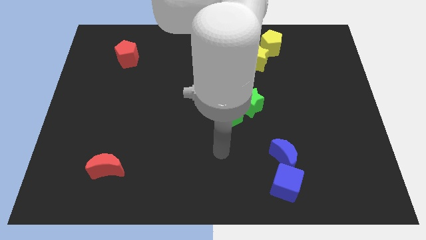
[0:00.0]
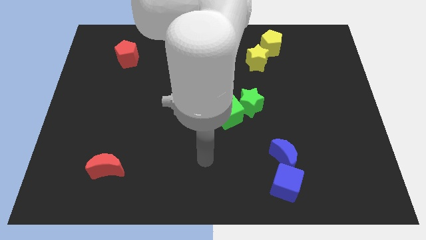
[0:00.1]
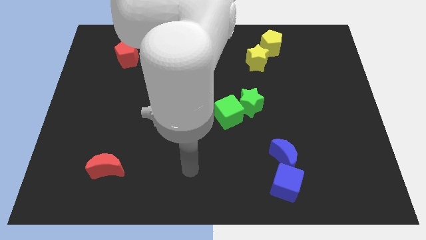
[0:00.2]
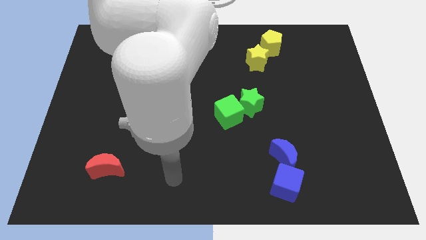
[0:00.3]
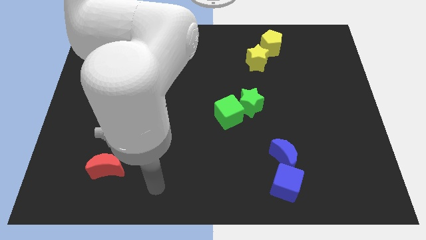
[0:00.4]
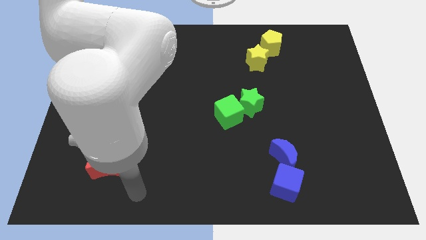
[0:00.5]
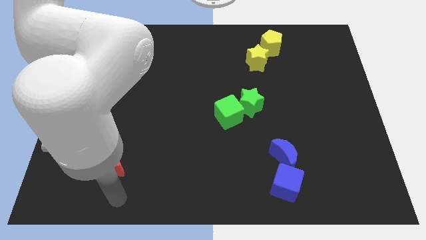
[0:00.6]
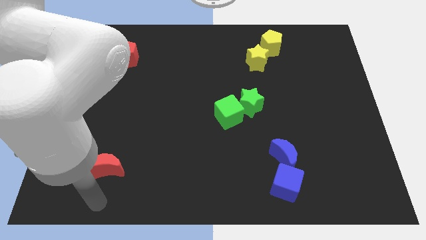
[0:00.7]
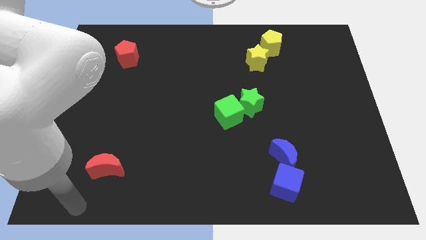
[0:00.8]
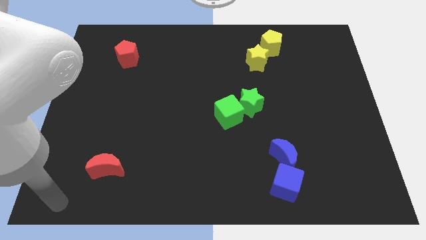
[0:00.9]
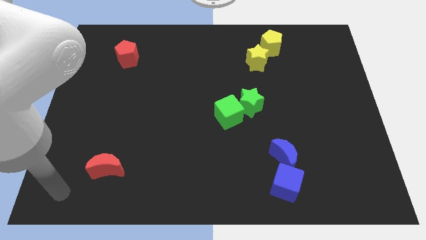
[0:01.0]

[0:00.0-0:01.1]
point your arm towards the bottom left of the board

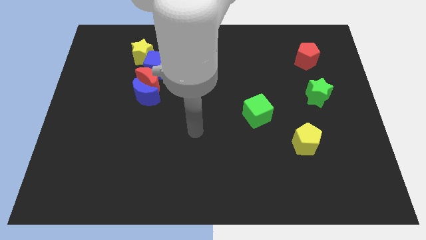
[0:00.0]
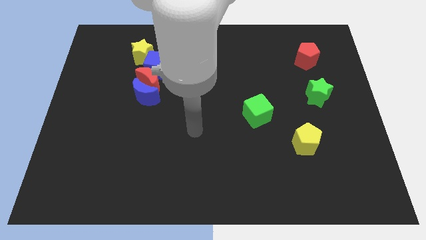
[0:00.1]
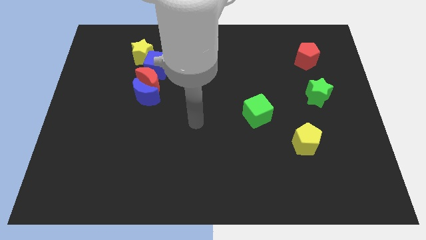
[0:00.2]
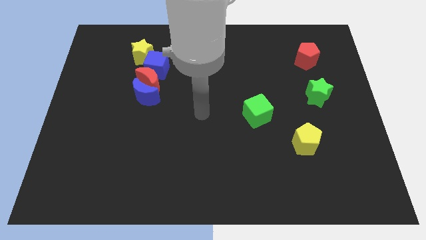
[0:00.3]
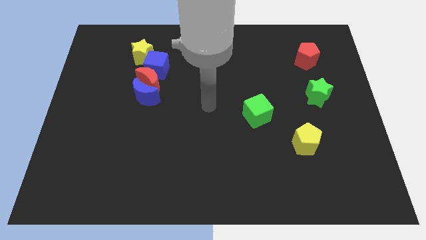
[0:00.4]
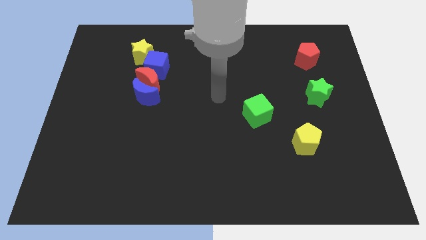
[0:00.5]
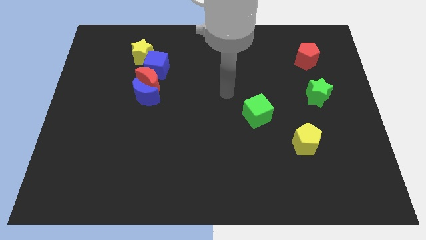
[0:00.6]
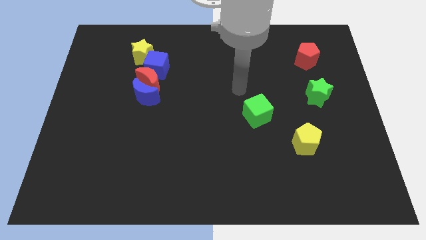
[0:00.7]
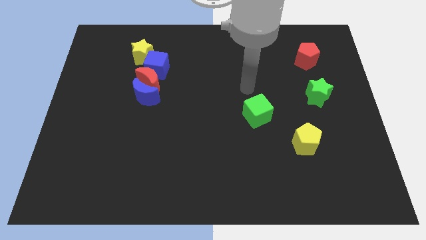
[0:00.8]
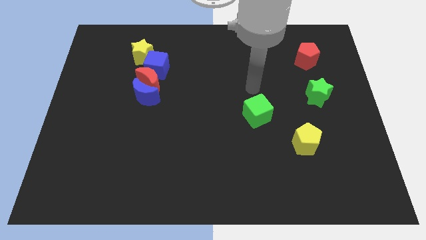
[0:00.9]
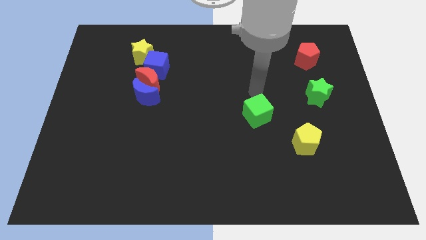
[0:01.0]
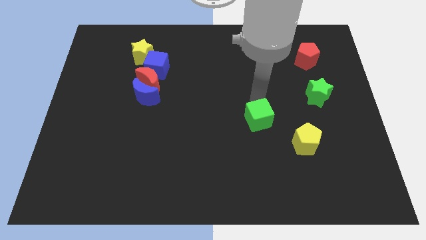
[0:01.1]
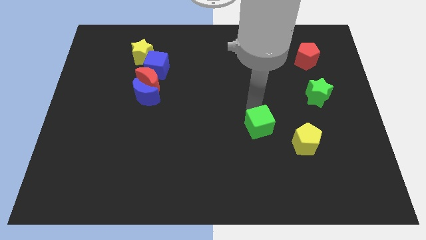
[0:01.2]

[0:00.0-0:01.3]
move your arm to top of the green block

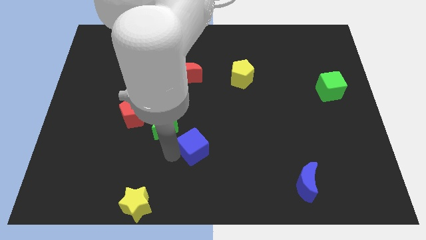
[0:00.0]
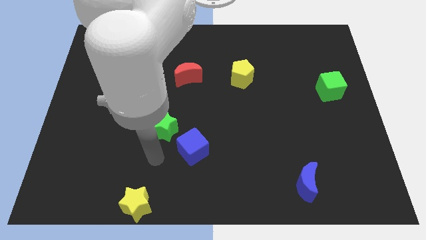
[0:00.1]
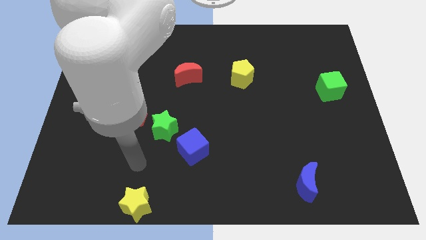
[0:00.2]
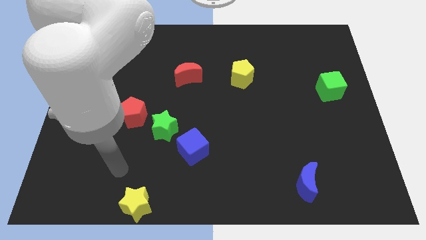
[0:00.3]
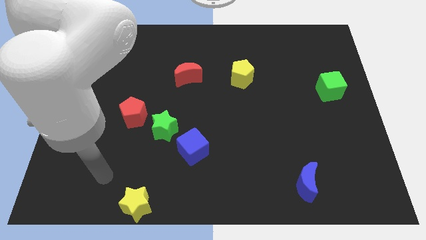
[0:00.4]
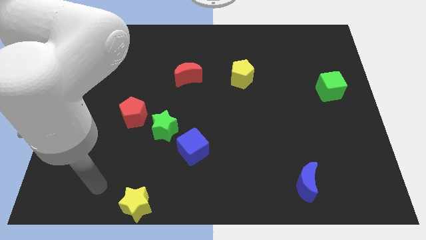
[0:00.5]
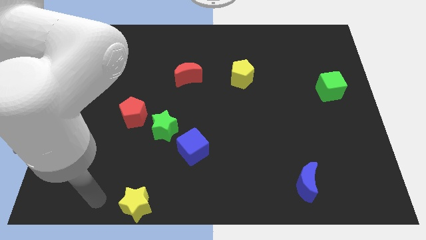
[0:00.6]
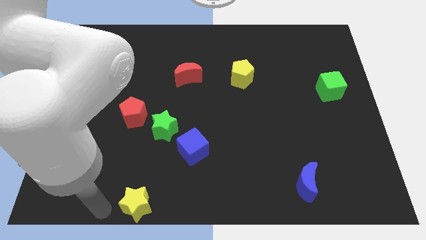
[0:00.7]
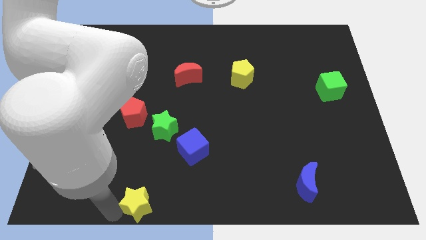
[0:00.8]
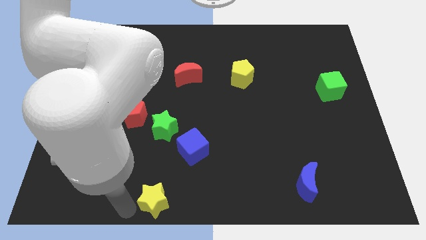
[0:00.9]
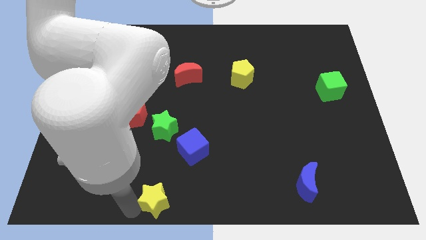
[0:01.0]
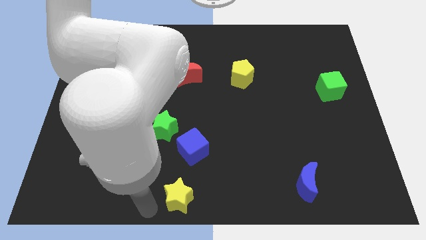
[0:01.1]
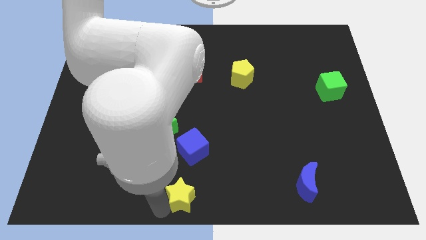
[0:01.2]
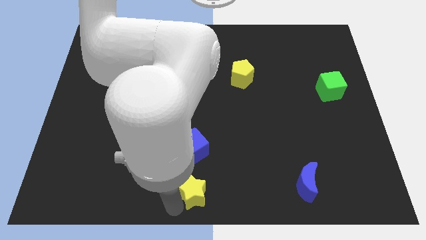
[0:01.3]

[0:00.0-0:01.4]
put the yellow star below the blue cube

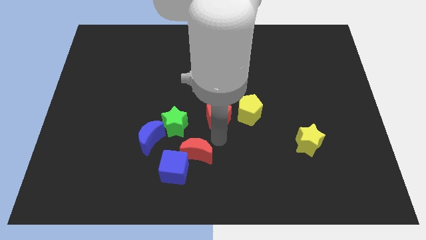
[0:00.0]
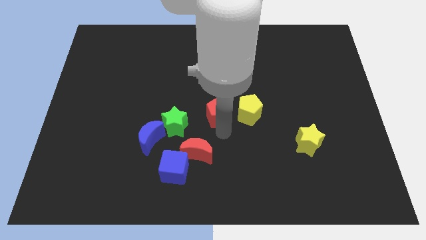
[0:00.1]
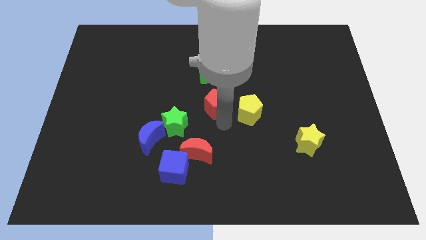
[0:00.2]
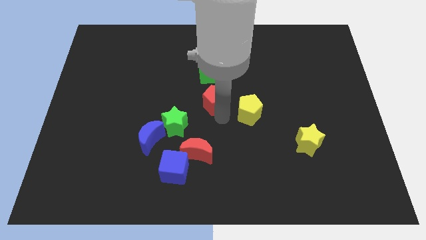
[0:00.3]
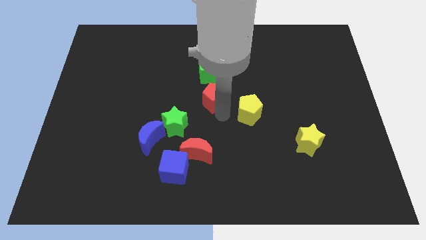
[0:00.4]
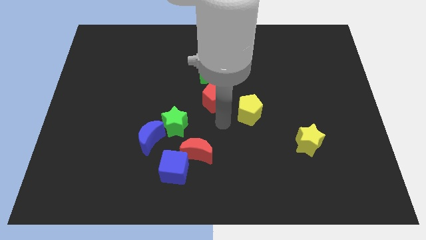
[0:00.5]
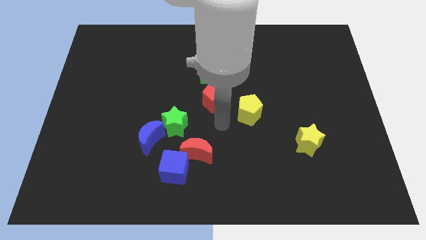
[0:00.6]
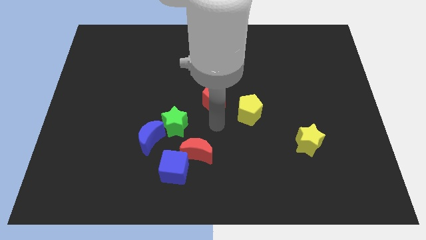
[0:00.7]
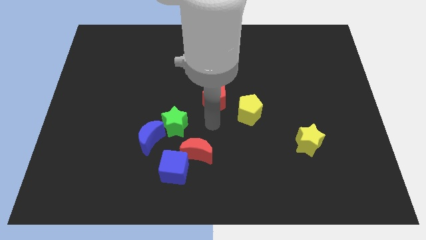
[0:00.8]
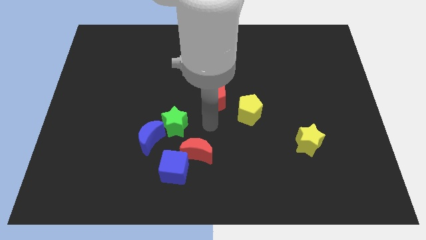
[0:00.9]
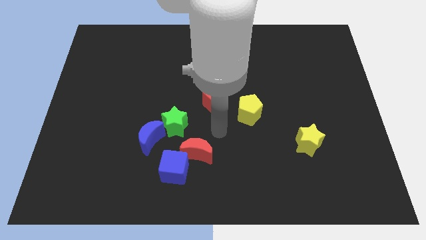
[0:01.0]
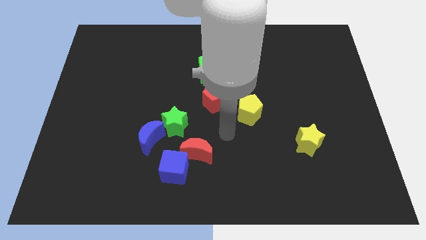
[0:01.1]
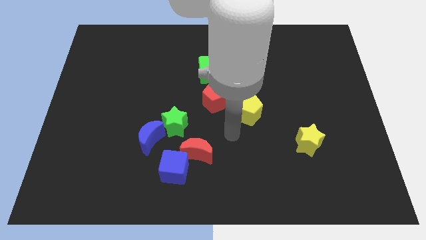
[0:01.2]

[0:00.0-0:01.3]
push the red pentagon to the bottom of the green cube

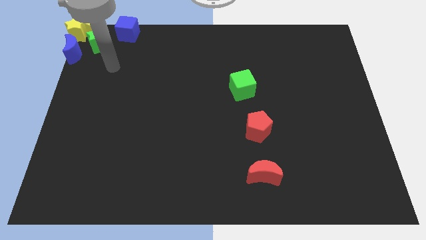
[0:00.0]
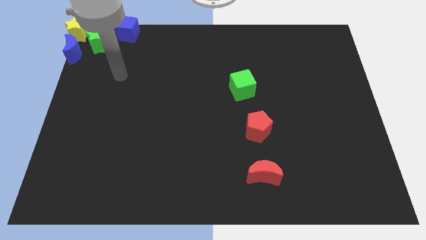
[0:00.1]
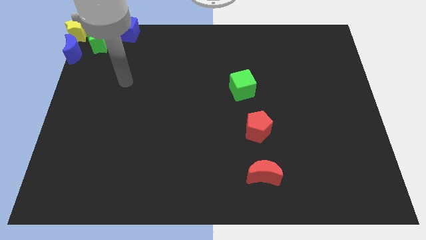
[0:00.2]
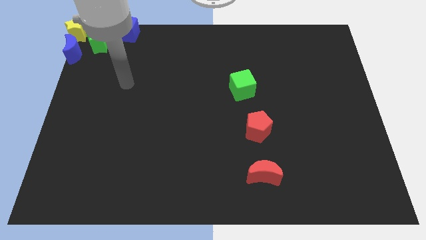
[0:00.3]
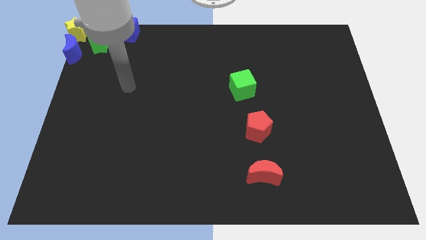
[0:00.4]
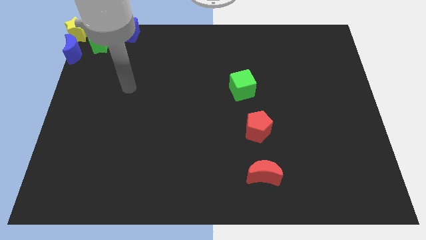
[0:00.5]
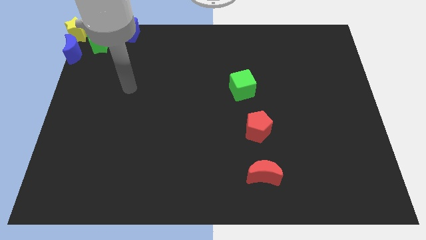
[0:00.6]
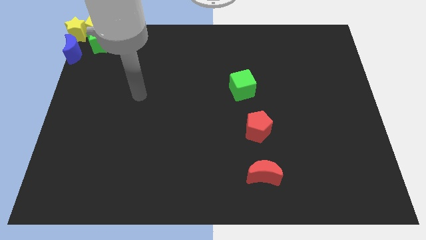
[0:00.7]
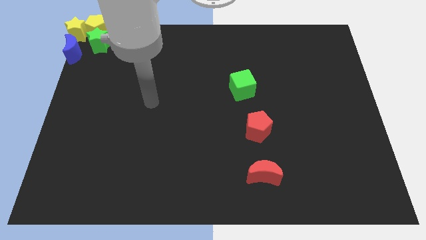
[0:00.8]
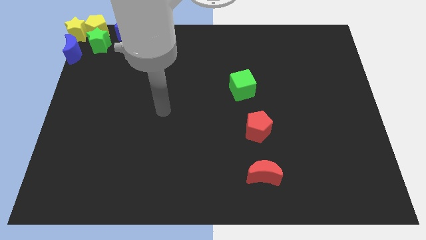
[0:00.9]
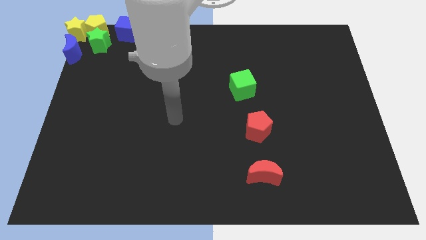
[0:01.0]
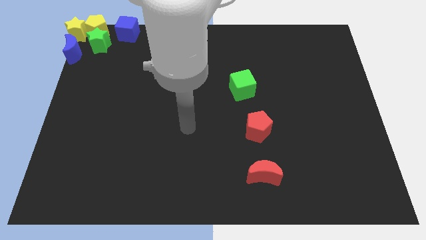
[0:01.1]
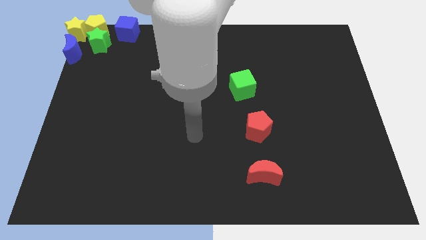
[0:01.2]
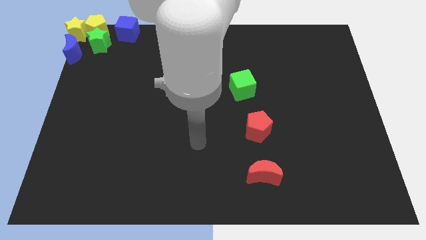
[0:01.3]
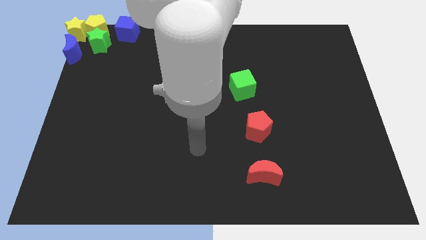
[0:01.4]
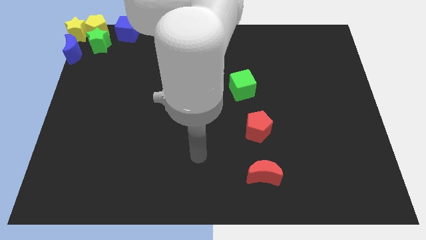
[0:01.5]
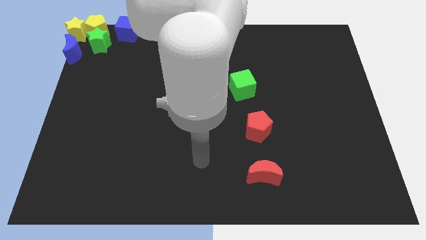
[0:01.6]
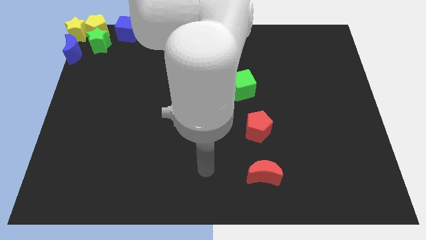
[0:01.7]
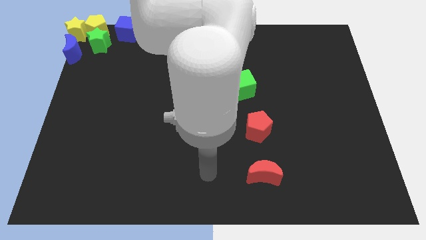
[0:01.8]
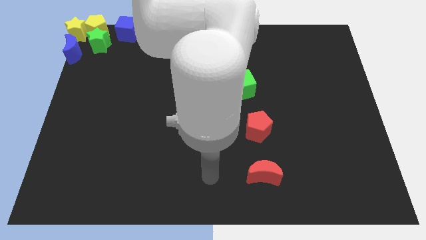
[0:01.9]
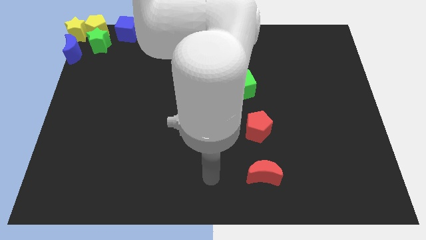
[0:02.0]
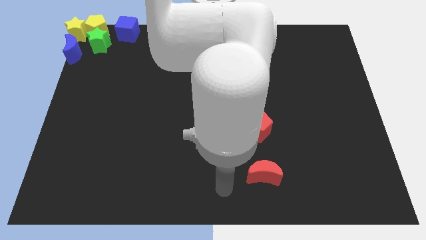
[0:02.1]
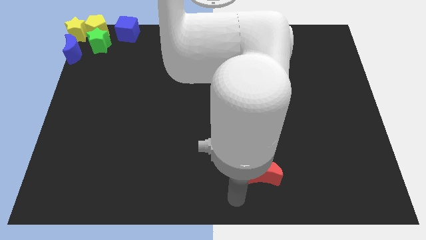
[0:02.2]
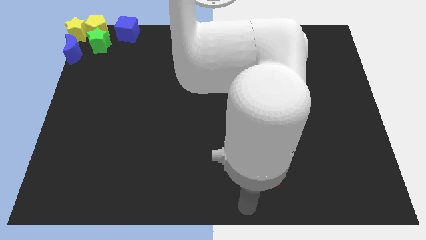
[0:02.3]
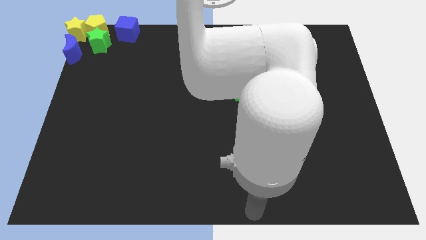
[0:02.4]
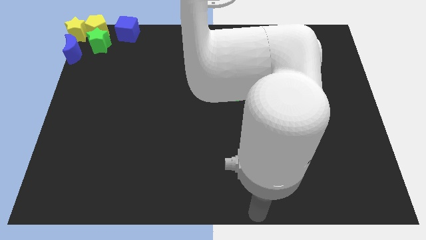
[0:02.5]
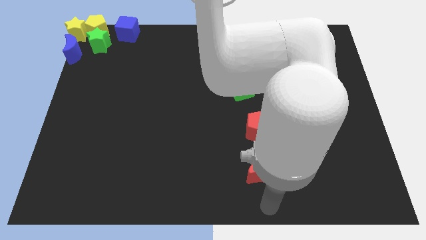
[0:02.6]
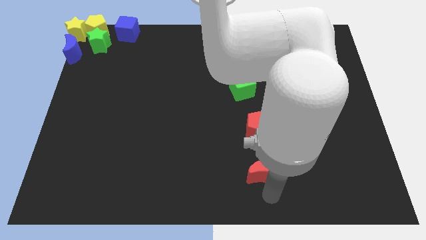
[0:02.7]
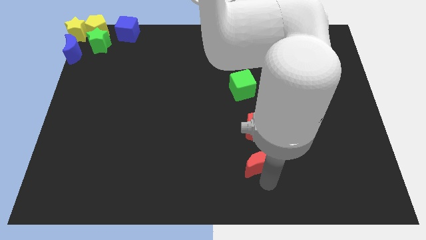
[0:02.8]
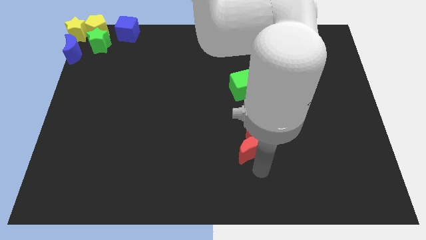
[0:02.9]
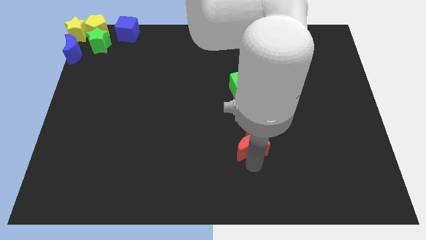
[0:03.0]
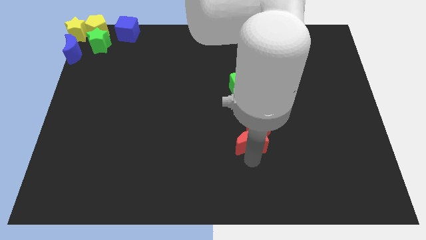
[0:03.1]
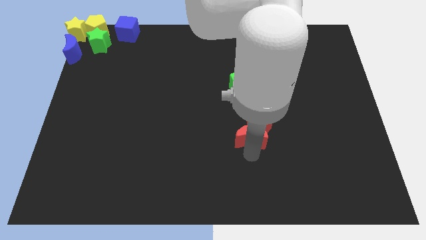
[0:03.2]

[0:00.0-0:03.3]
slide the red moon into the red pentagon

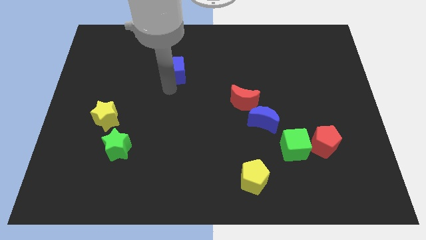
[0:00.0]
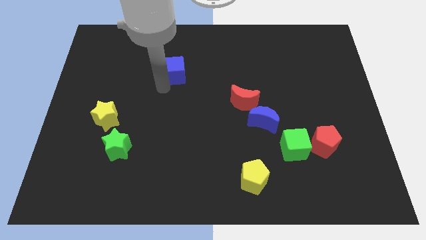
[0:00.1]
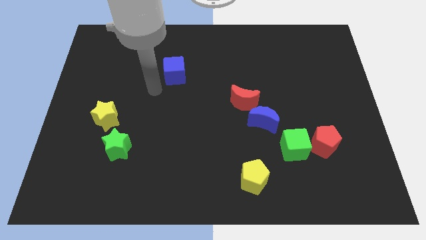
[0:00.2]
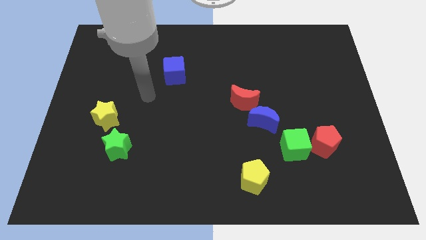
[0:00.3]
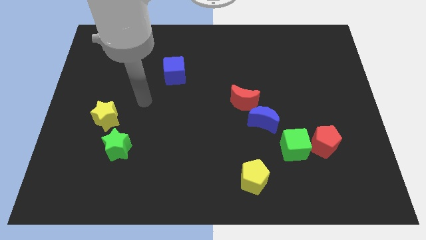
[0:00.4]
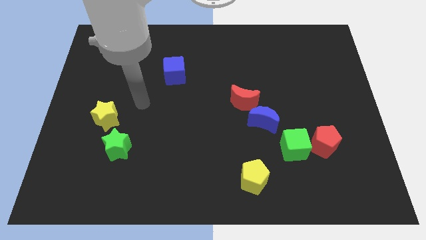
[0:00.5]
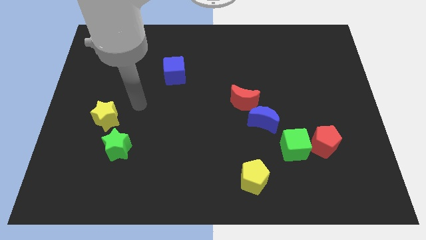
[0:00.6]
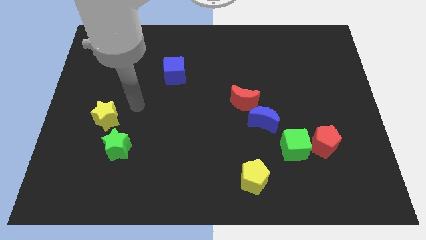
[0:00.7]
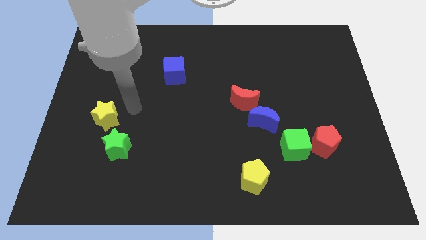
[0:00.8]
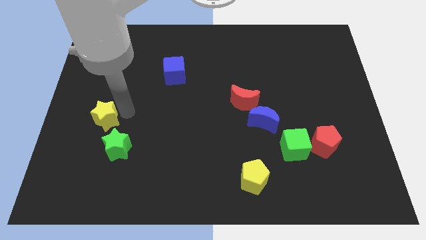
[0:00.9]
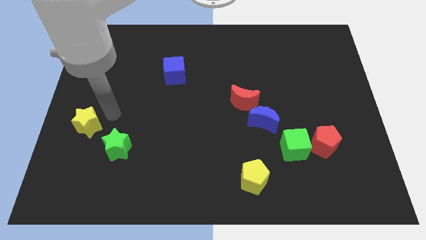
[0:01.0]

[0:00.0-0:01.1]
tap the yellow star
